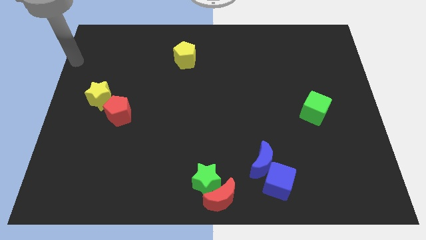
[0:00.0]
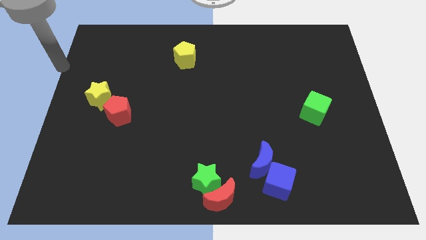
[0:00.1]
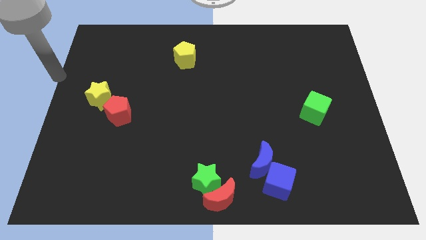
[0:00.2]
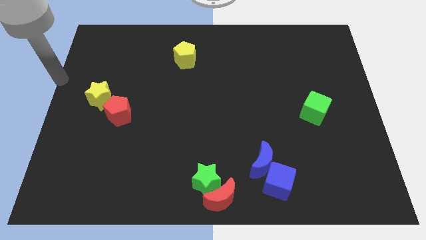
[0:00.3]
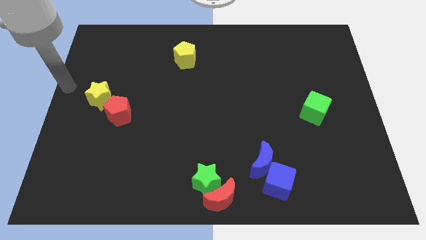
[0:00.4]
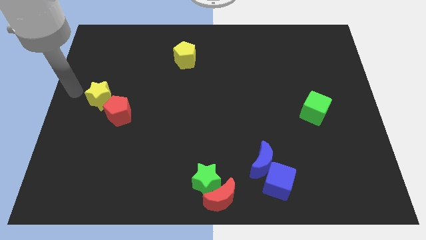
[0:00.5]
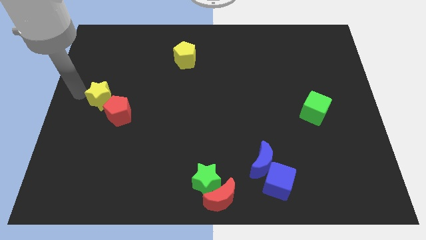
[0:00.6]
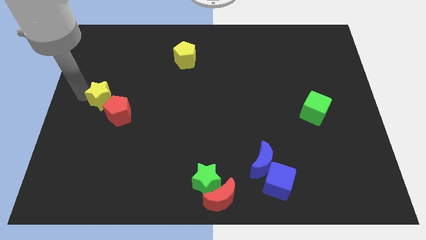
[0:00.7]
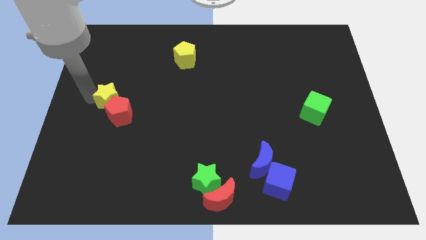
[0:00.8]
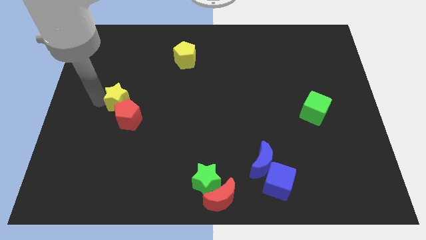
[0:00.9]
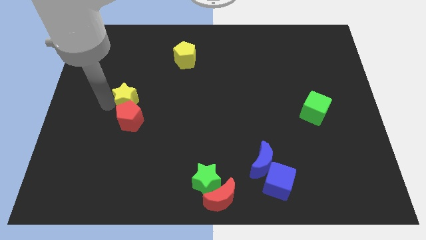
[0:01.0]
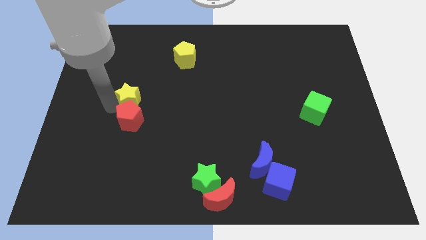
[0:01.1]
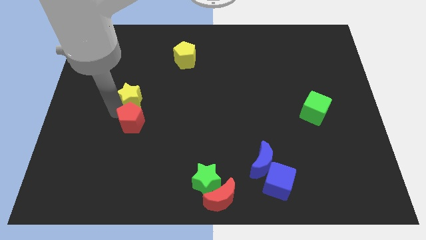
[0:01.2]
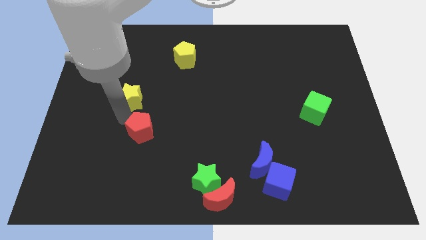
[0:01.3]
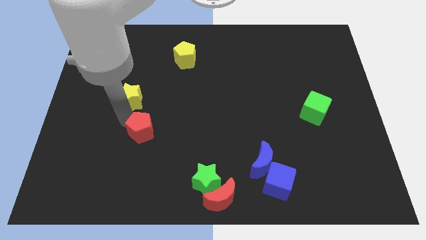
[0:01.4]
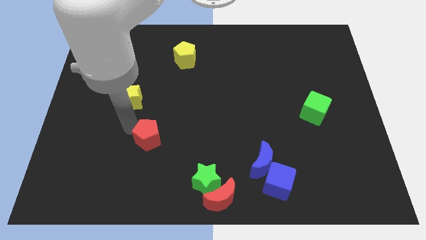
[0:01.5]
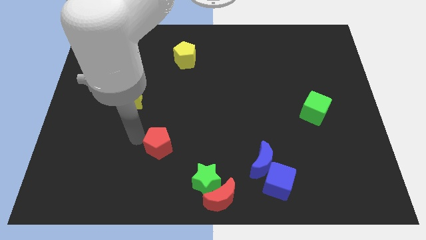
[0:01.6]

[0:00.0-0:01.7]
separate the red pentagon and yellow star

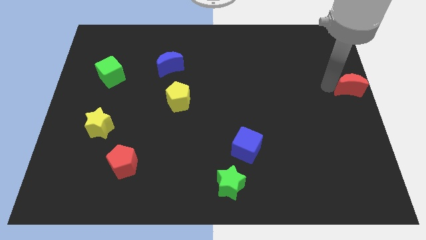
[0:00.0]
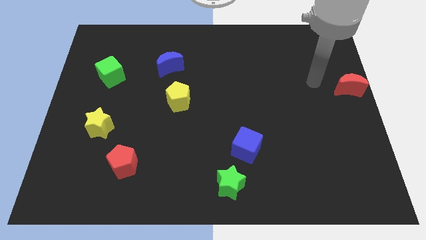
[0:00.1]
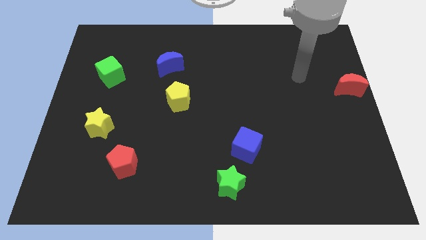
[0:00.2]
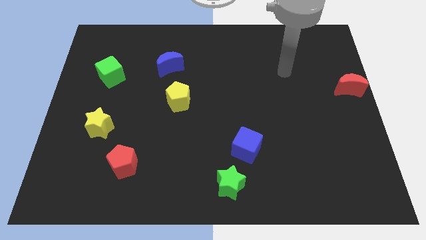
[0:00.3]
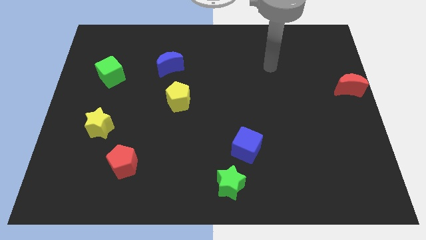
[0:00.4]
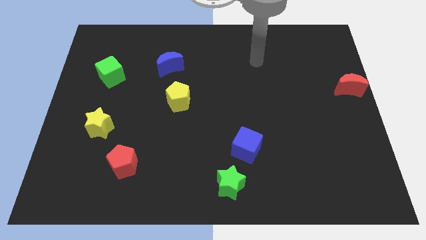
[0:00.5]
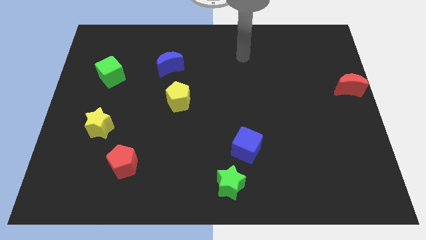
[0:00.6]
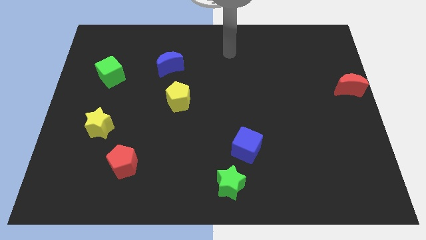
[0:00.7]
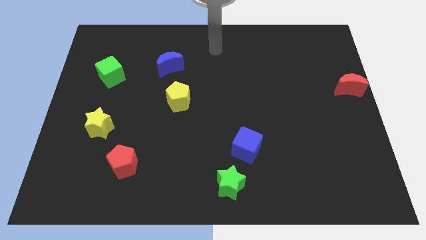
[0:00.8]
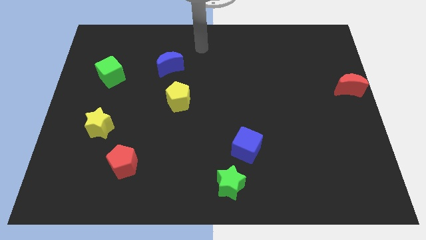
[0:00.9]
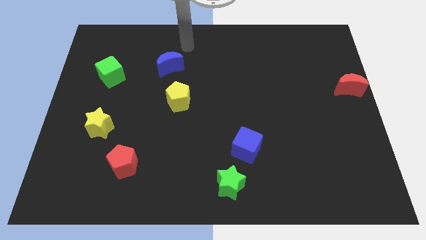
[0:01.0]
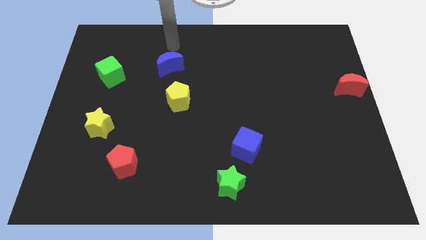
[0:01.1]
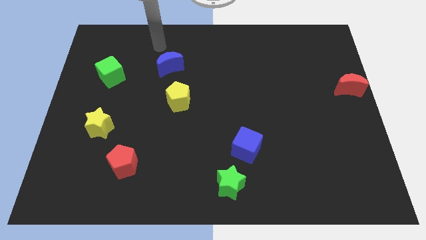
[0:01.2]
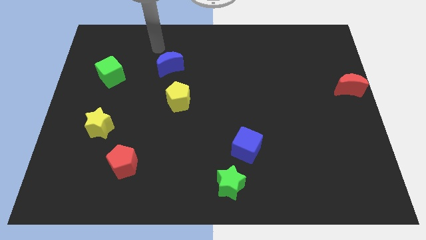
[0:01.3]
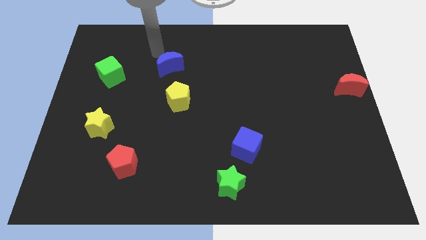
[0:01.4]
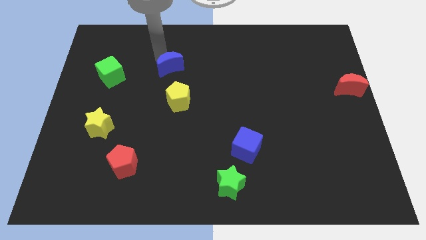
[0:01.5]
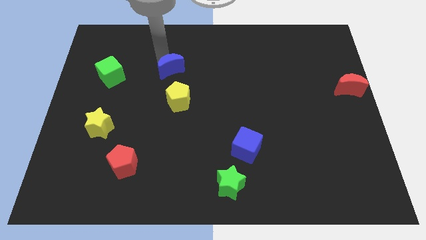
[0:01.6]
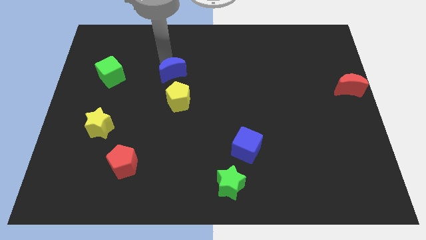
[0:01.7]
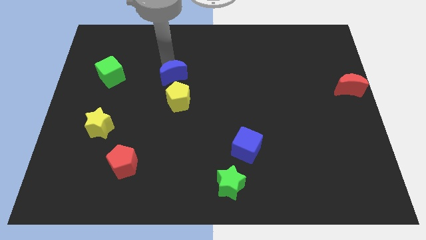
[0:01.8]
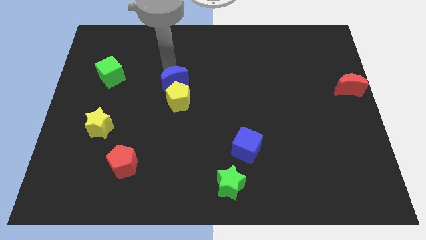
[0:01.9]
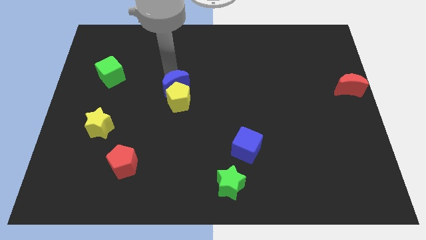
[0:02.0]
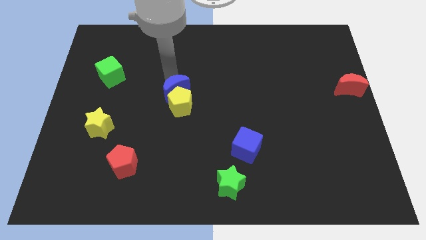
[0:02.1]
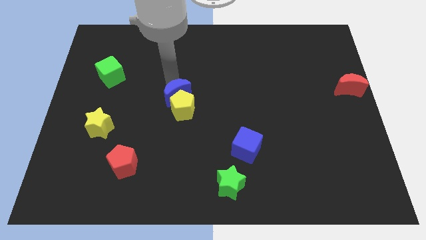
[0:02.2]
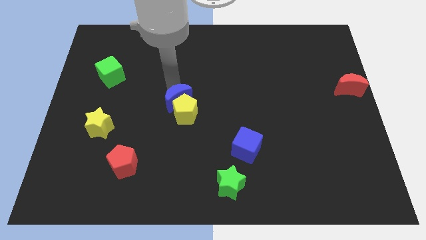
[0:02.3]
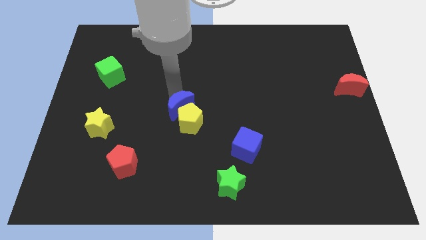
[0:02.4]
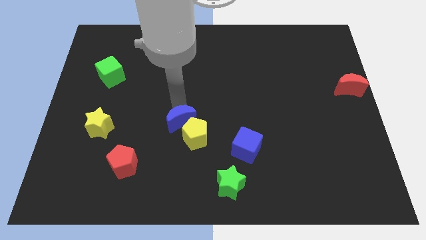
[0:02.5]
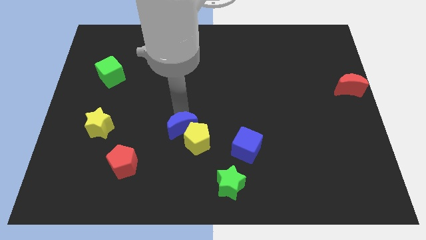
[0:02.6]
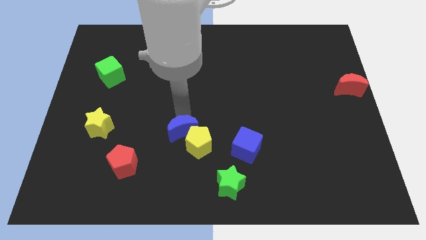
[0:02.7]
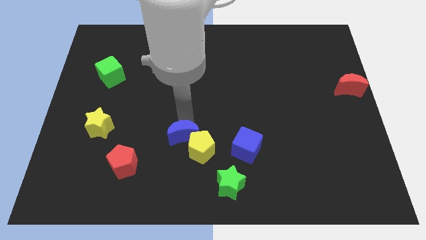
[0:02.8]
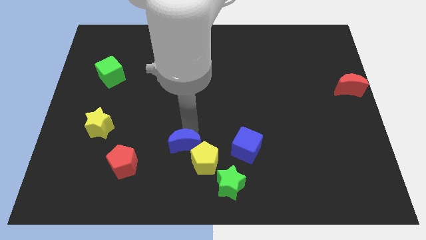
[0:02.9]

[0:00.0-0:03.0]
push the blue crescent along with yellow pentagon to the left of the blue cube

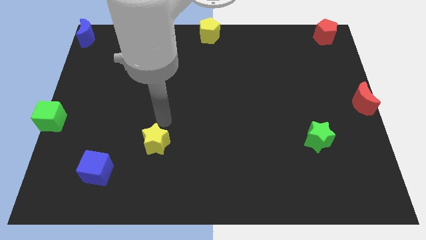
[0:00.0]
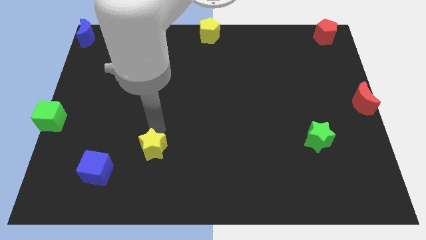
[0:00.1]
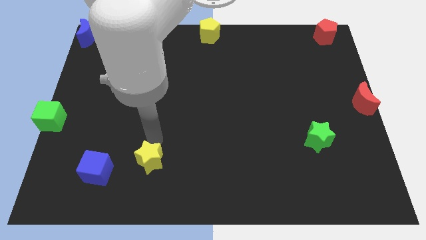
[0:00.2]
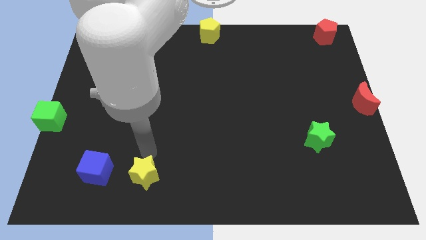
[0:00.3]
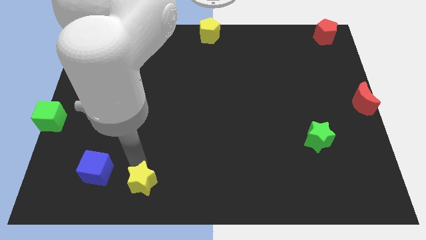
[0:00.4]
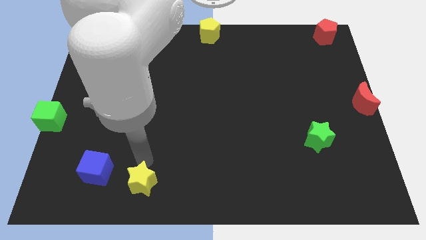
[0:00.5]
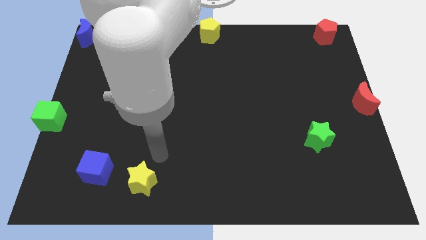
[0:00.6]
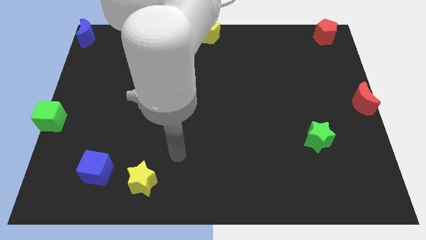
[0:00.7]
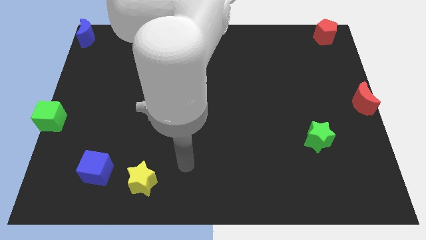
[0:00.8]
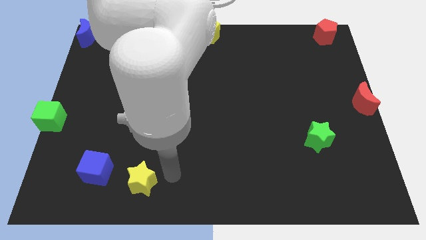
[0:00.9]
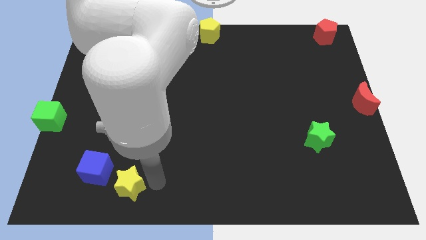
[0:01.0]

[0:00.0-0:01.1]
place yellow star to the right of the blue cube

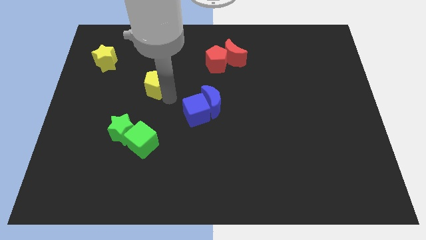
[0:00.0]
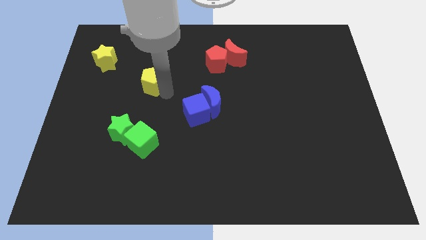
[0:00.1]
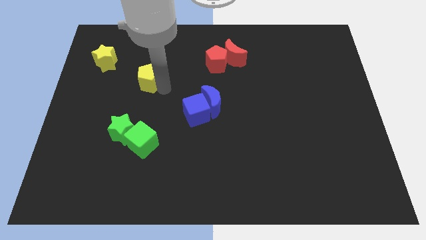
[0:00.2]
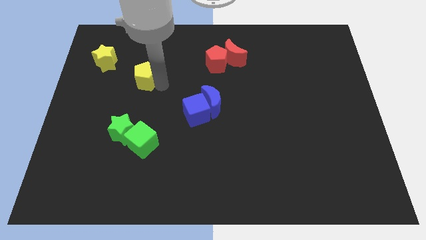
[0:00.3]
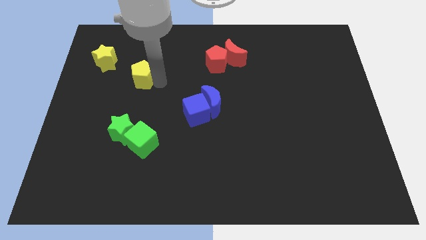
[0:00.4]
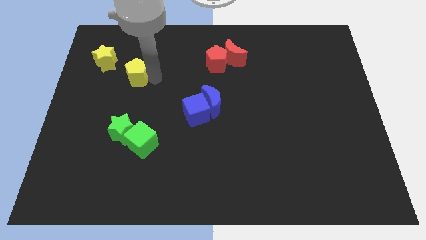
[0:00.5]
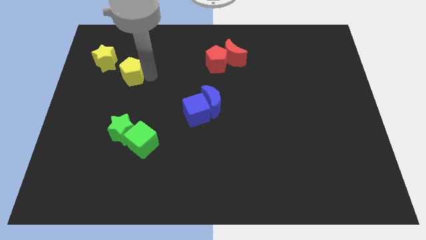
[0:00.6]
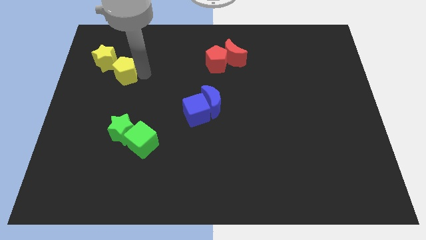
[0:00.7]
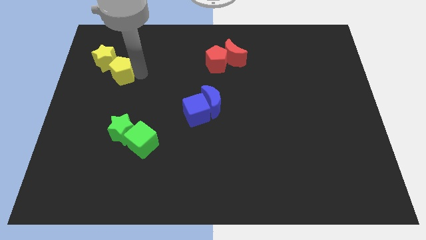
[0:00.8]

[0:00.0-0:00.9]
move yellow pentagon to the top left

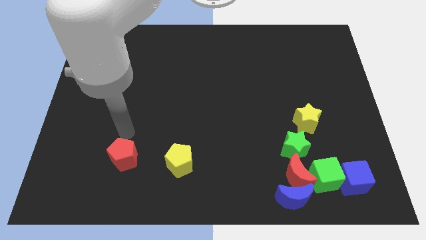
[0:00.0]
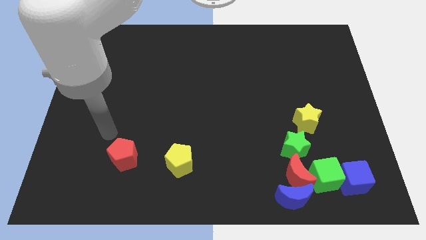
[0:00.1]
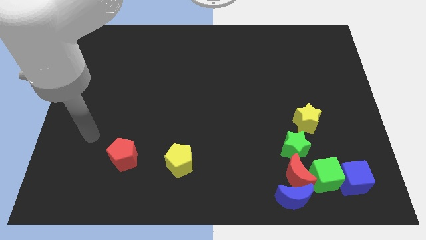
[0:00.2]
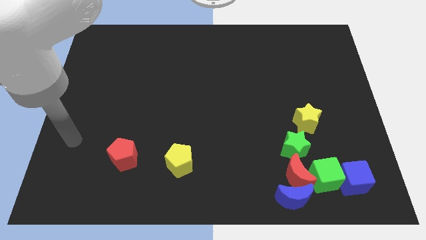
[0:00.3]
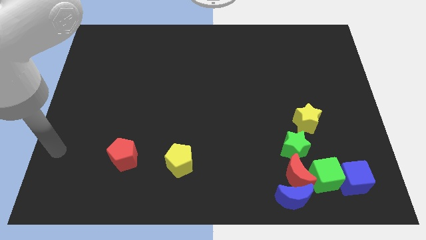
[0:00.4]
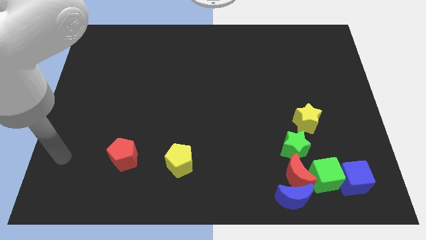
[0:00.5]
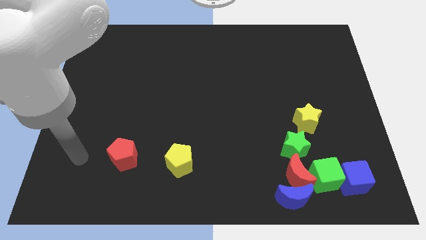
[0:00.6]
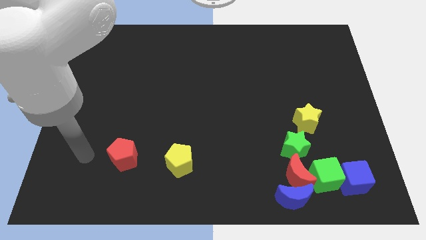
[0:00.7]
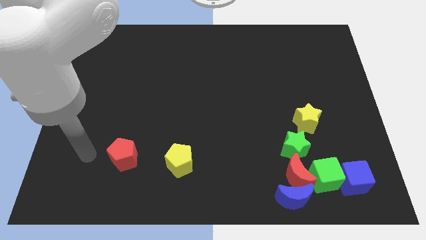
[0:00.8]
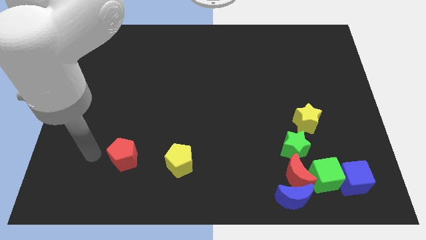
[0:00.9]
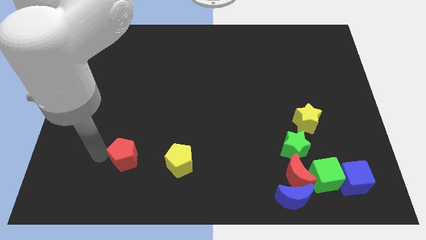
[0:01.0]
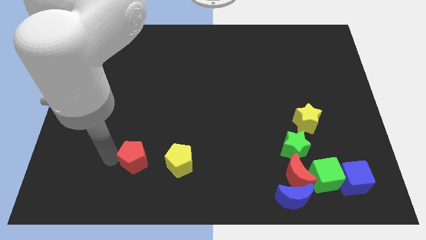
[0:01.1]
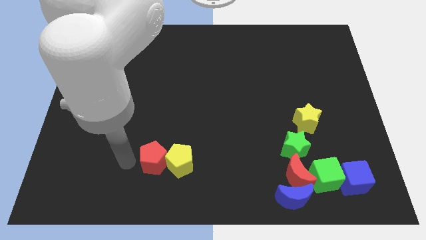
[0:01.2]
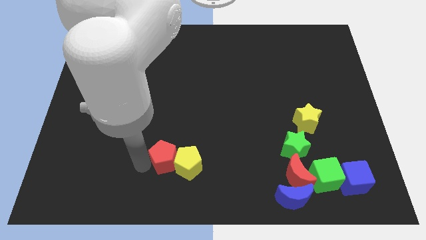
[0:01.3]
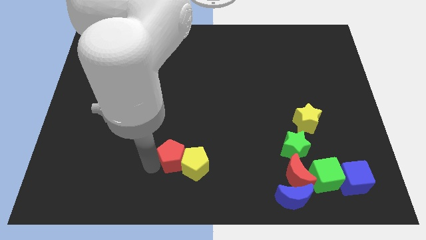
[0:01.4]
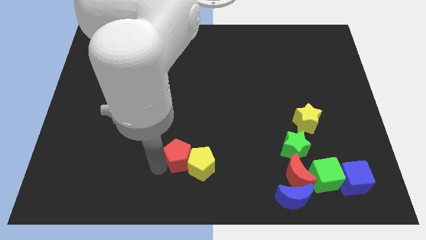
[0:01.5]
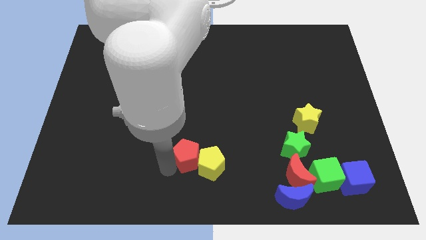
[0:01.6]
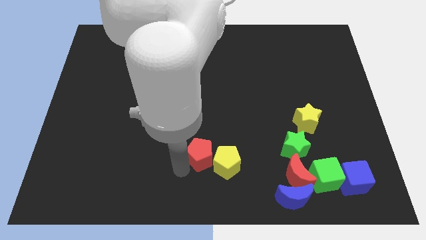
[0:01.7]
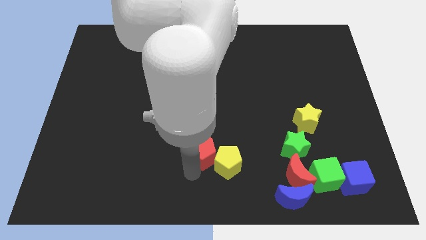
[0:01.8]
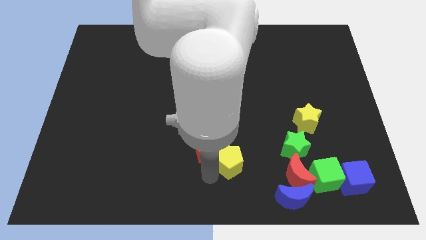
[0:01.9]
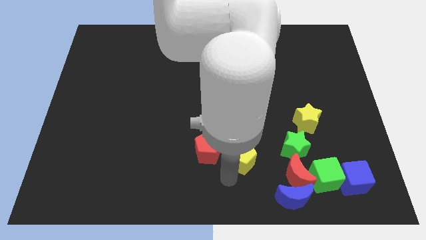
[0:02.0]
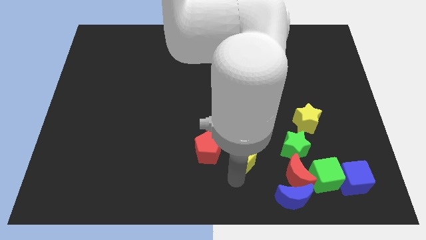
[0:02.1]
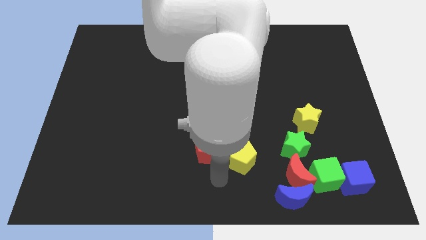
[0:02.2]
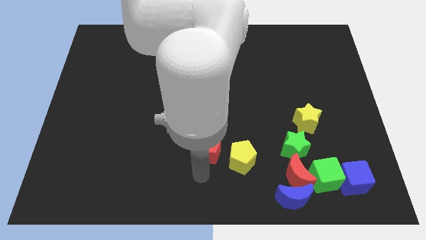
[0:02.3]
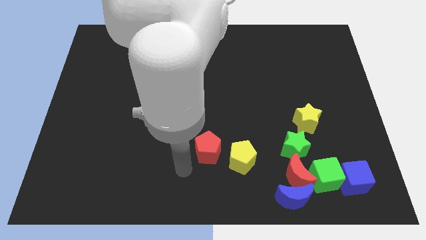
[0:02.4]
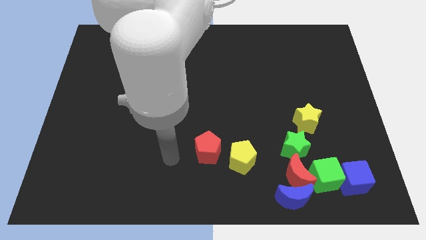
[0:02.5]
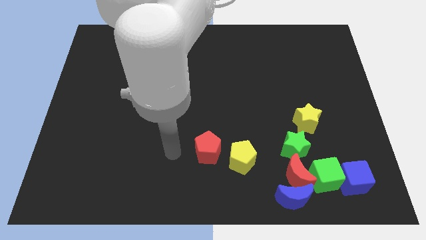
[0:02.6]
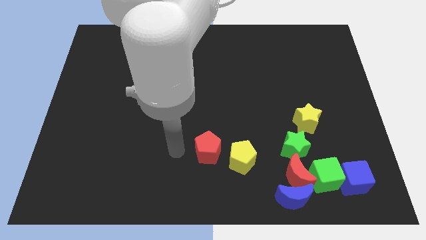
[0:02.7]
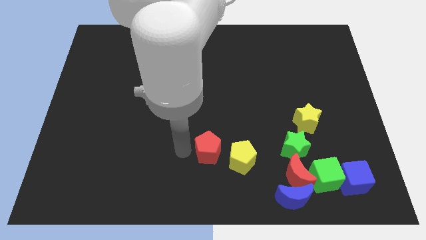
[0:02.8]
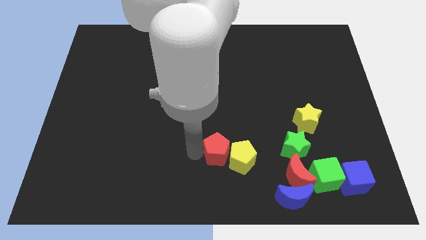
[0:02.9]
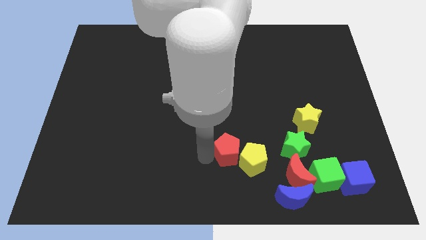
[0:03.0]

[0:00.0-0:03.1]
move the red pentagon in to the yellow pentagon
